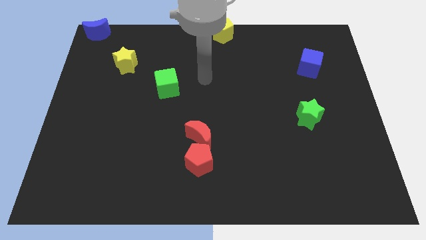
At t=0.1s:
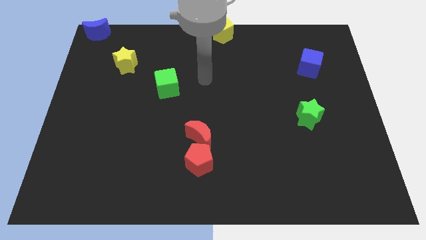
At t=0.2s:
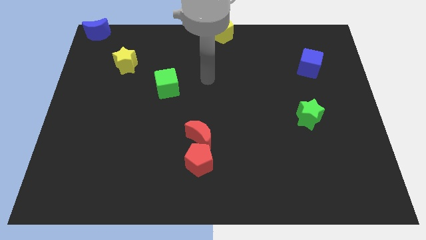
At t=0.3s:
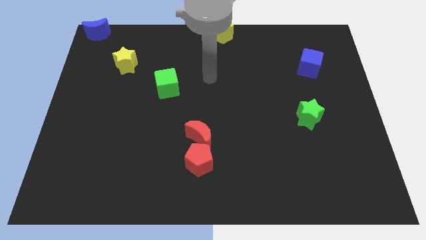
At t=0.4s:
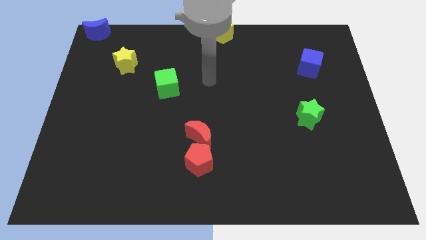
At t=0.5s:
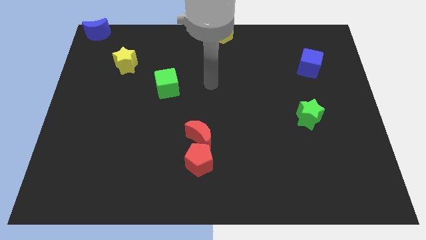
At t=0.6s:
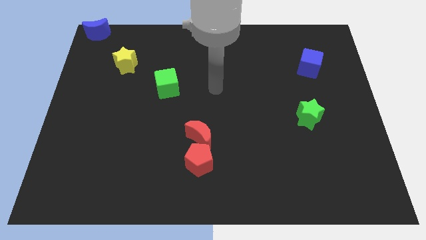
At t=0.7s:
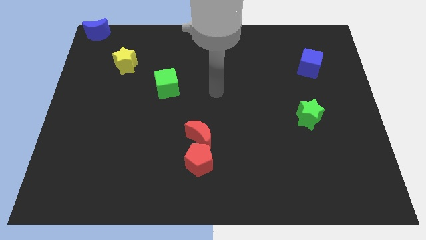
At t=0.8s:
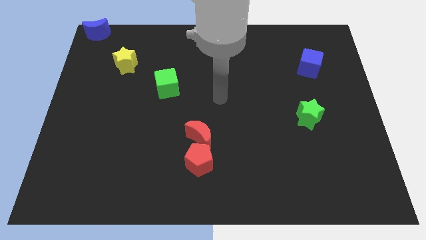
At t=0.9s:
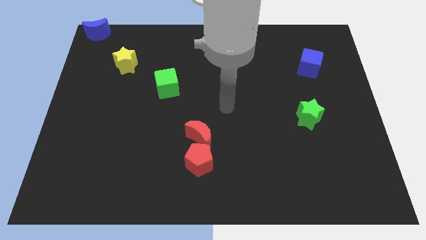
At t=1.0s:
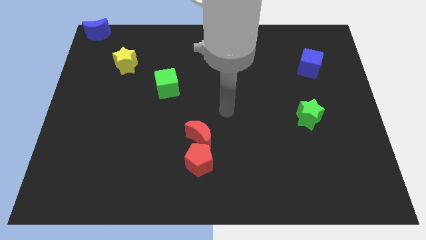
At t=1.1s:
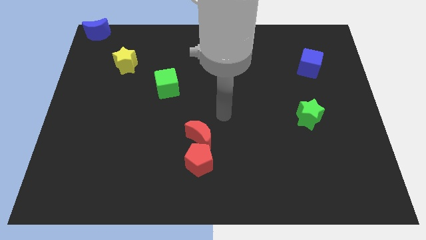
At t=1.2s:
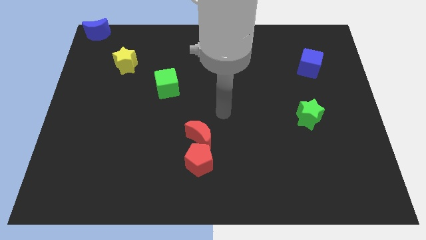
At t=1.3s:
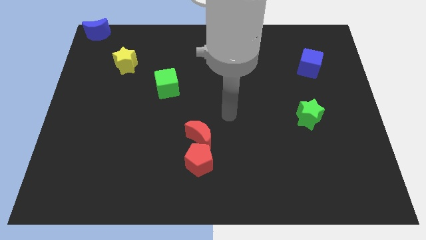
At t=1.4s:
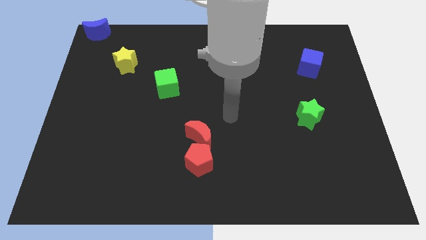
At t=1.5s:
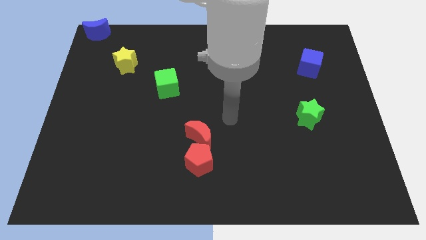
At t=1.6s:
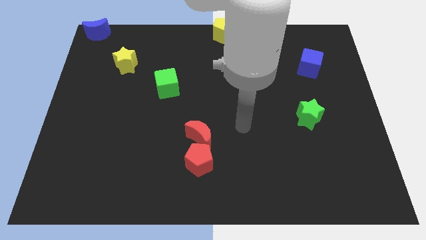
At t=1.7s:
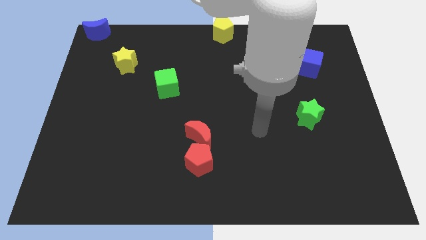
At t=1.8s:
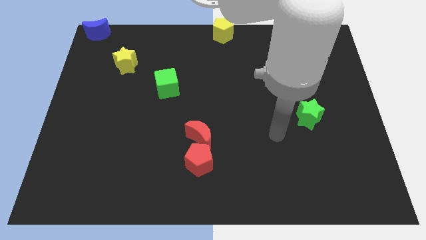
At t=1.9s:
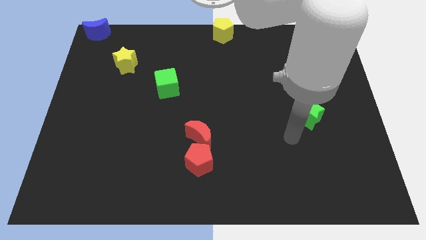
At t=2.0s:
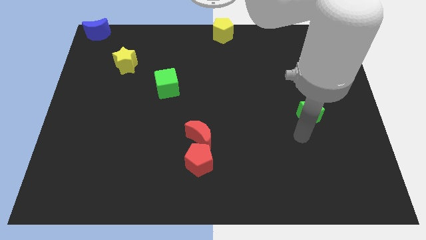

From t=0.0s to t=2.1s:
point the arm to the right of the red moon

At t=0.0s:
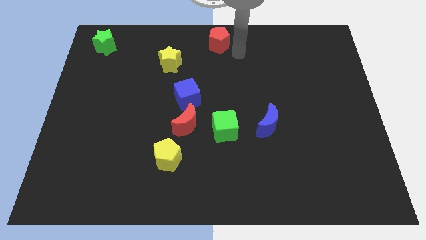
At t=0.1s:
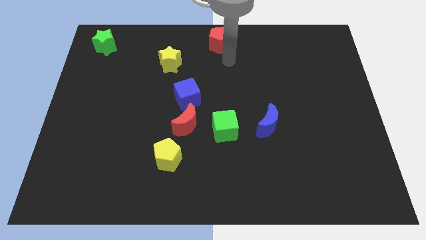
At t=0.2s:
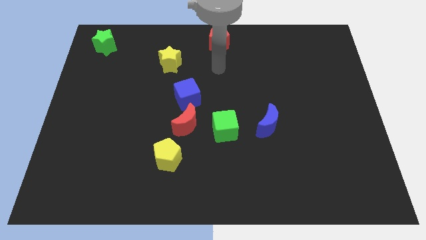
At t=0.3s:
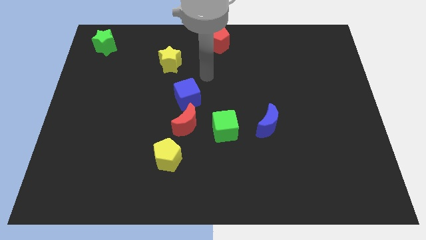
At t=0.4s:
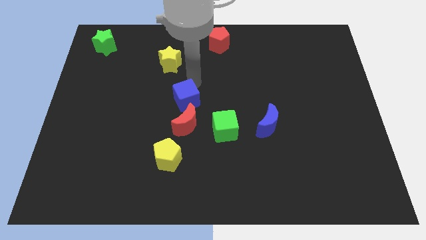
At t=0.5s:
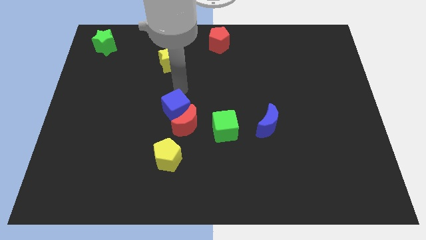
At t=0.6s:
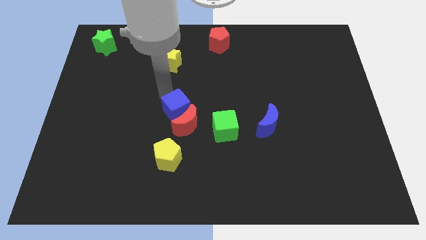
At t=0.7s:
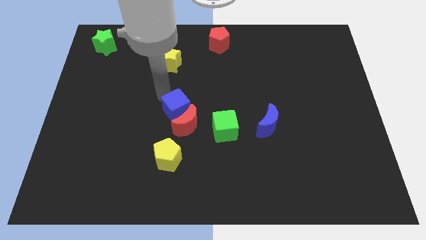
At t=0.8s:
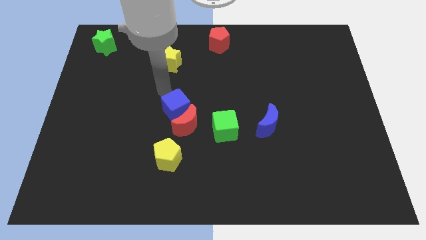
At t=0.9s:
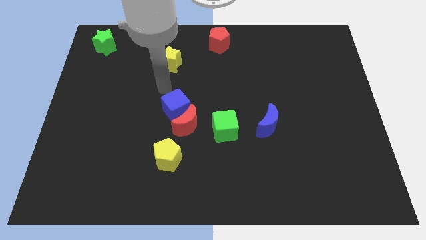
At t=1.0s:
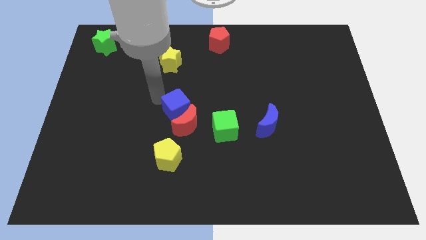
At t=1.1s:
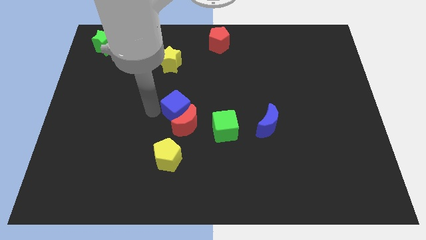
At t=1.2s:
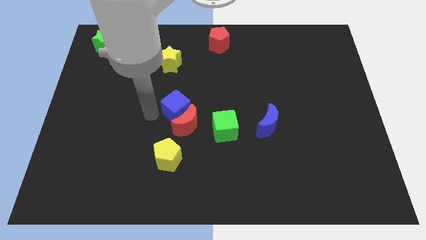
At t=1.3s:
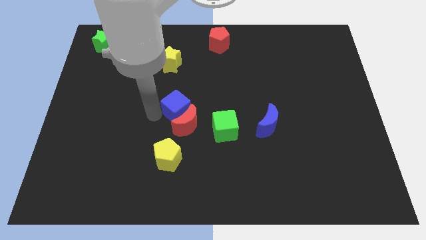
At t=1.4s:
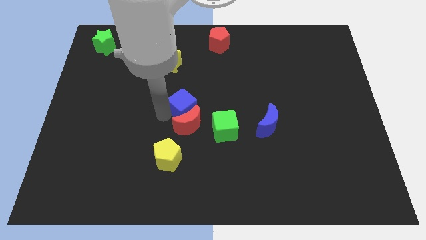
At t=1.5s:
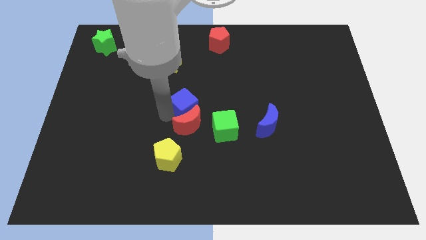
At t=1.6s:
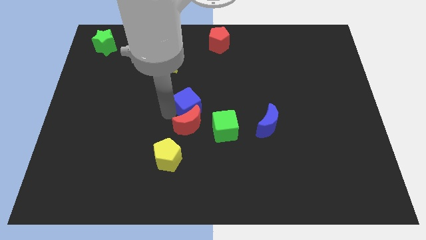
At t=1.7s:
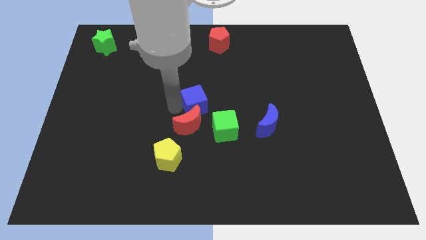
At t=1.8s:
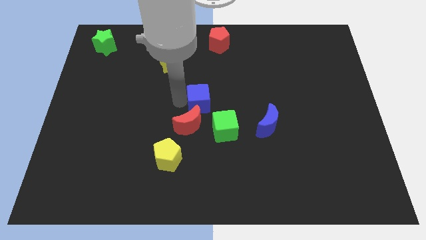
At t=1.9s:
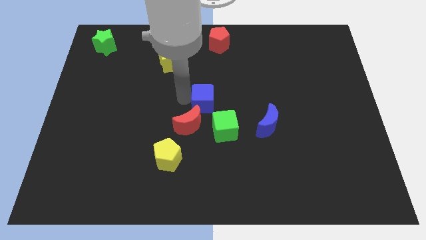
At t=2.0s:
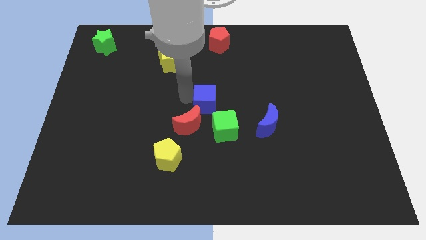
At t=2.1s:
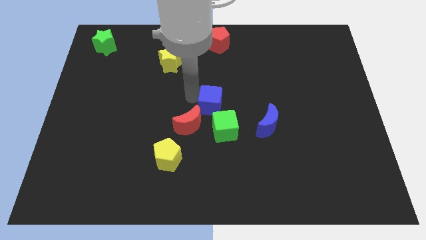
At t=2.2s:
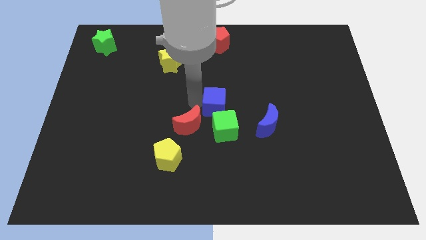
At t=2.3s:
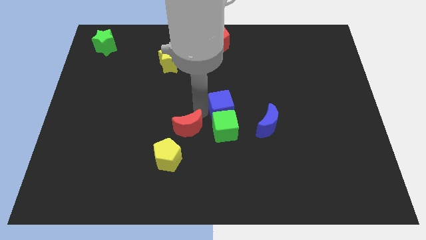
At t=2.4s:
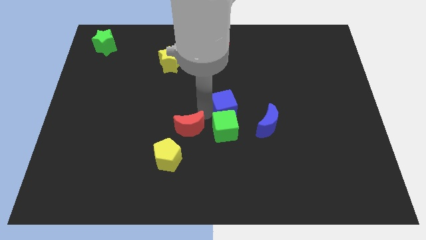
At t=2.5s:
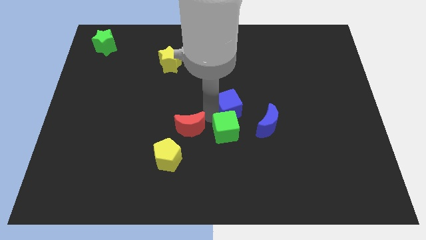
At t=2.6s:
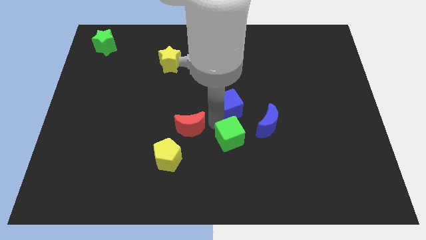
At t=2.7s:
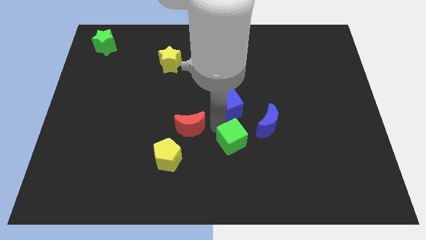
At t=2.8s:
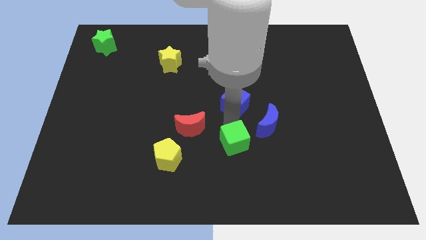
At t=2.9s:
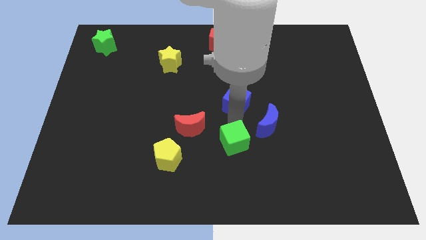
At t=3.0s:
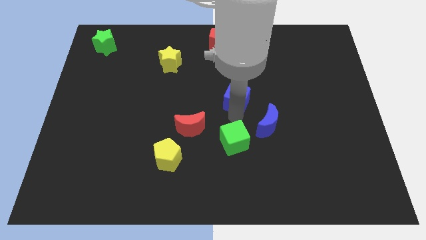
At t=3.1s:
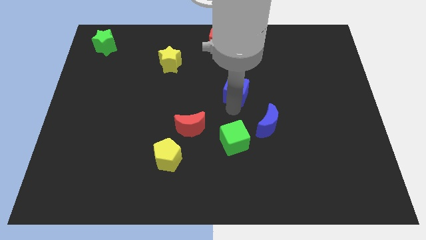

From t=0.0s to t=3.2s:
place green cube beside blue moon

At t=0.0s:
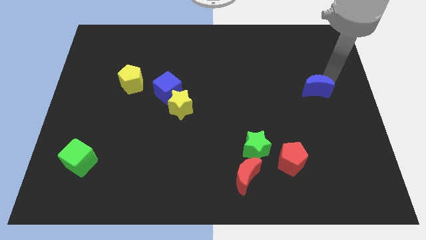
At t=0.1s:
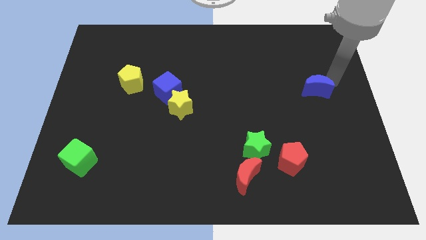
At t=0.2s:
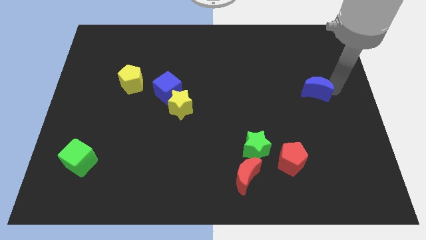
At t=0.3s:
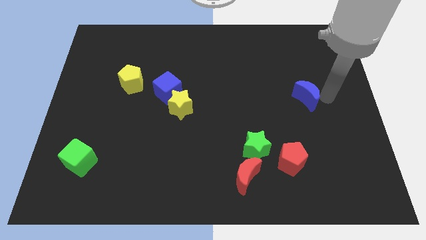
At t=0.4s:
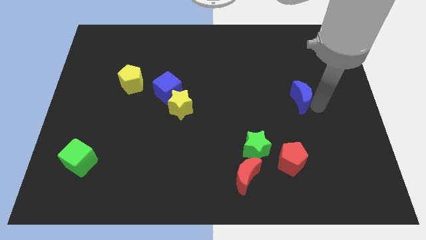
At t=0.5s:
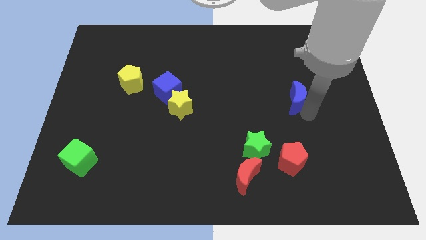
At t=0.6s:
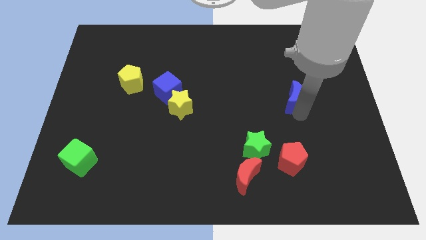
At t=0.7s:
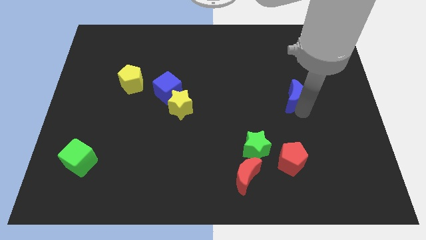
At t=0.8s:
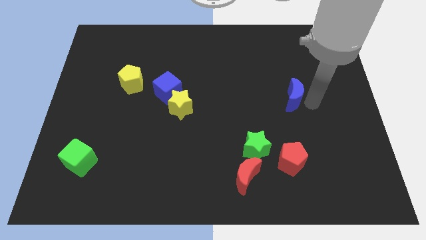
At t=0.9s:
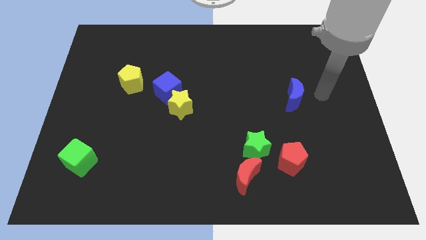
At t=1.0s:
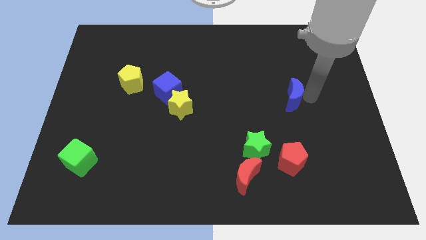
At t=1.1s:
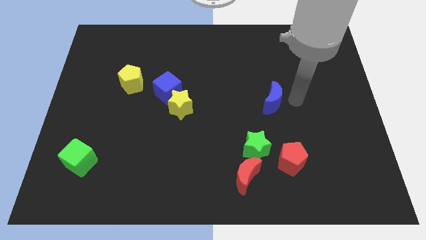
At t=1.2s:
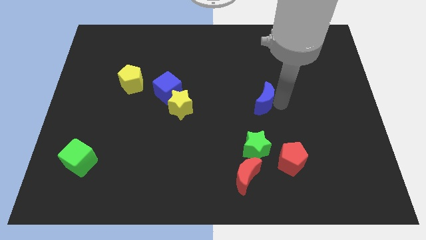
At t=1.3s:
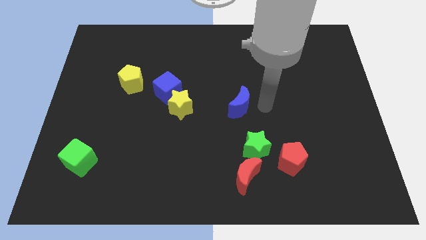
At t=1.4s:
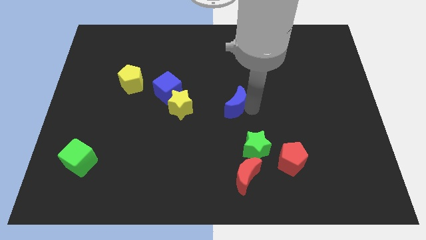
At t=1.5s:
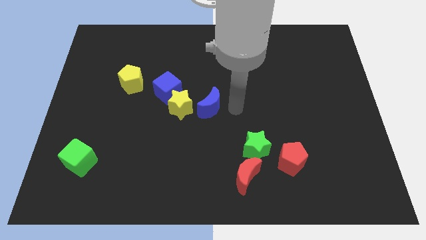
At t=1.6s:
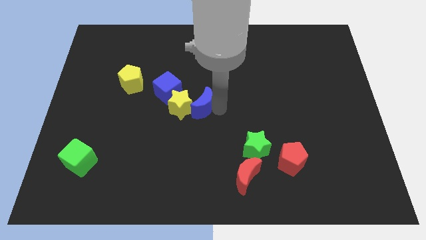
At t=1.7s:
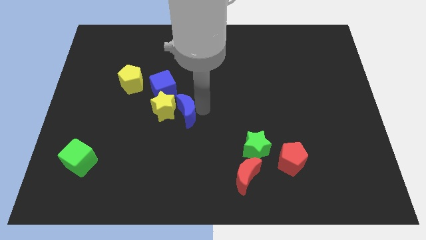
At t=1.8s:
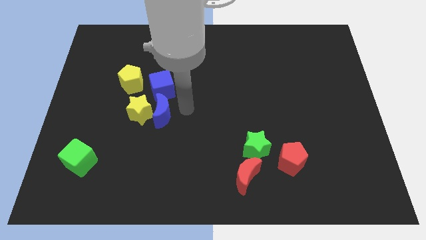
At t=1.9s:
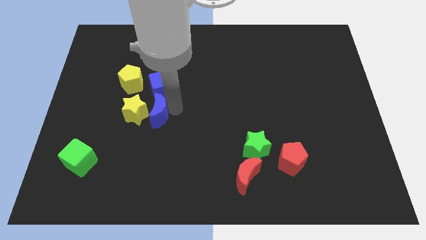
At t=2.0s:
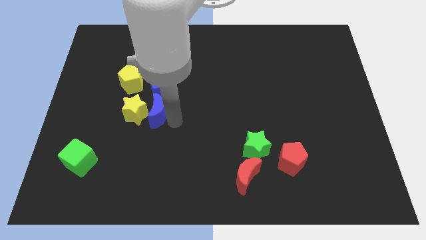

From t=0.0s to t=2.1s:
push the blue crescent into the yellow star

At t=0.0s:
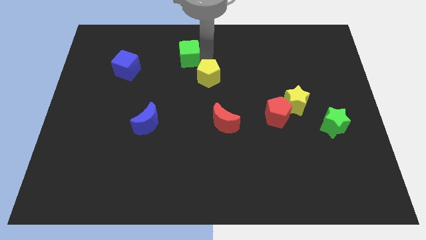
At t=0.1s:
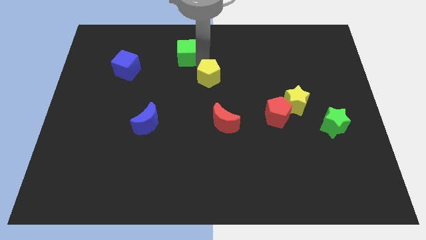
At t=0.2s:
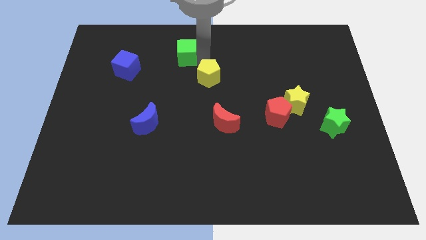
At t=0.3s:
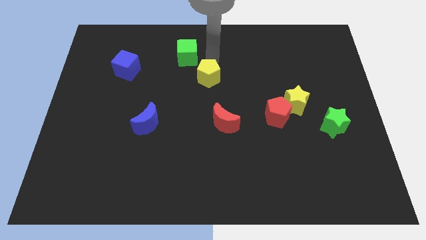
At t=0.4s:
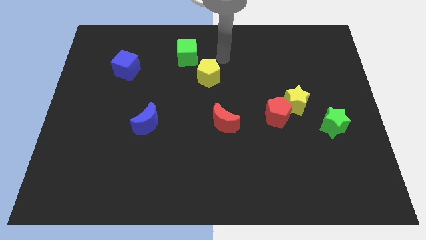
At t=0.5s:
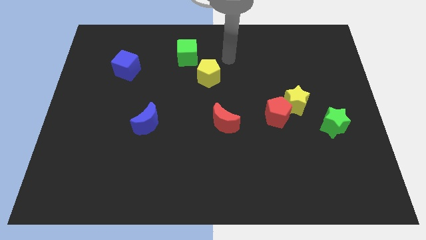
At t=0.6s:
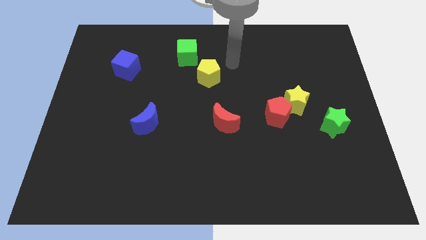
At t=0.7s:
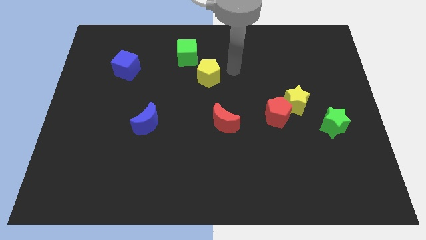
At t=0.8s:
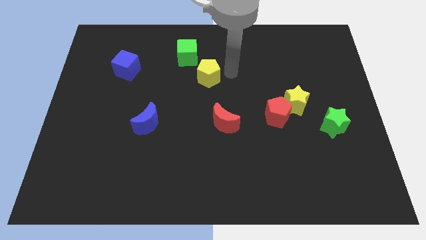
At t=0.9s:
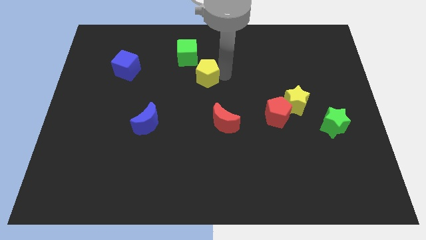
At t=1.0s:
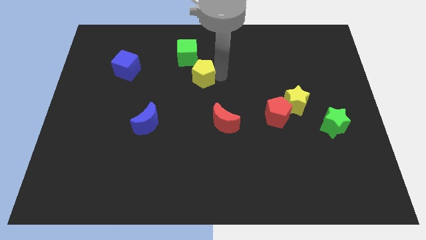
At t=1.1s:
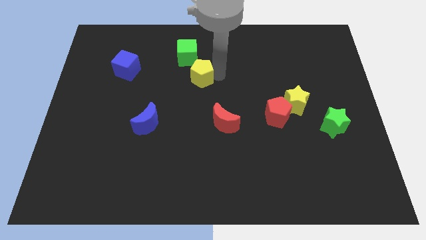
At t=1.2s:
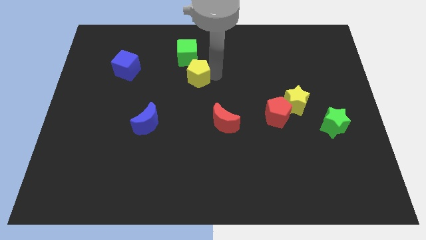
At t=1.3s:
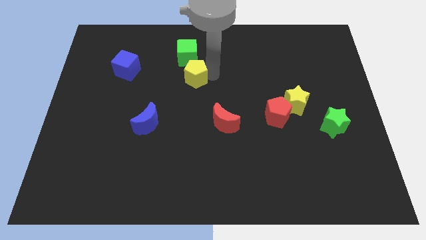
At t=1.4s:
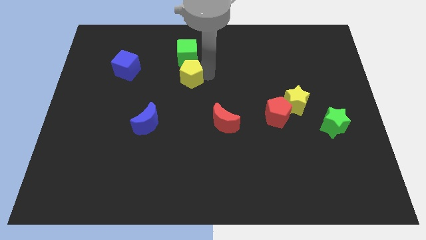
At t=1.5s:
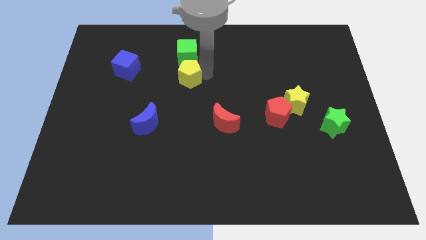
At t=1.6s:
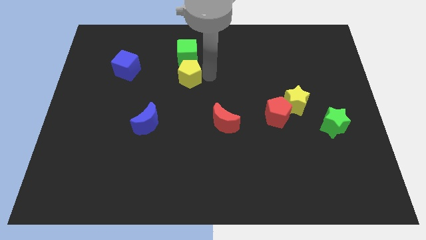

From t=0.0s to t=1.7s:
place the yellow pentagon below the green cube
